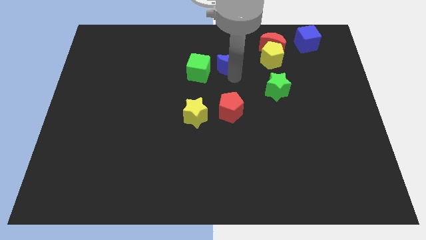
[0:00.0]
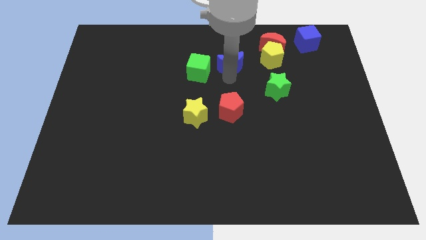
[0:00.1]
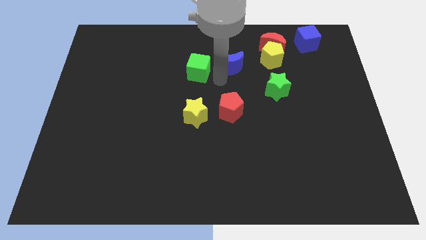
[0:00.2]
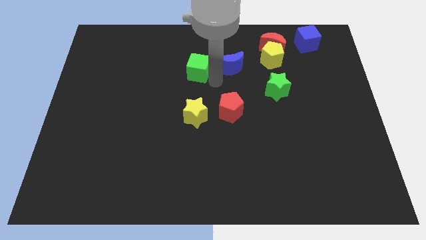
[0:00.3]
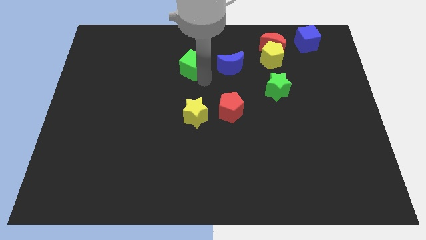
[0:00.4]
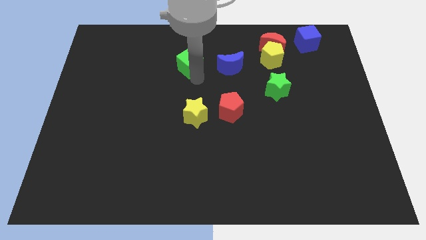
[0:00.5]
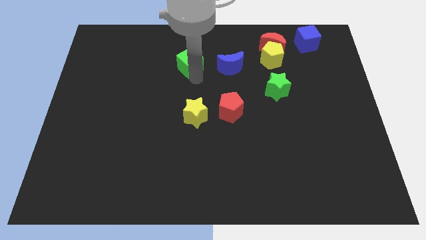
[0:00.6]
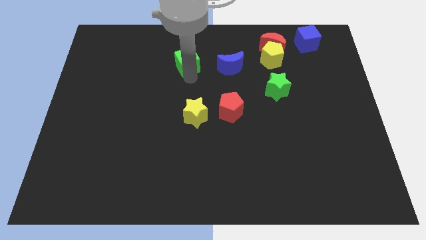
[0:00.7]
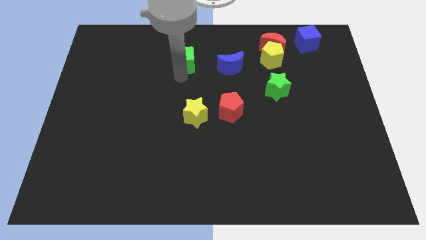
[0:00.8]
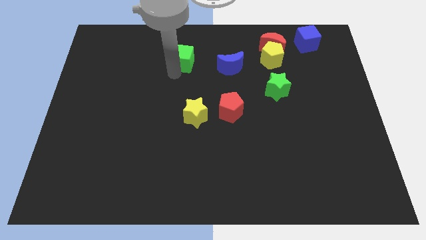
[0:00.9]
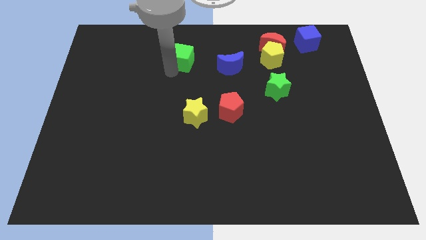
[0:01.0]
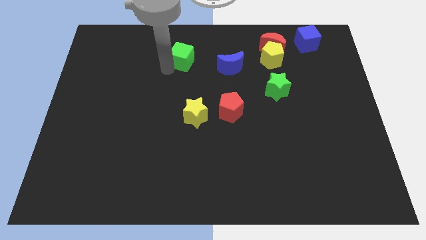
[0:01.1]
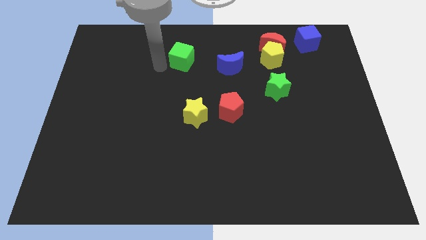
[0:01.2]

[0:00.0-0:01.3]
slightly push the green cube towards the top side of the board

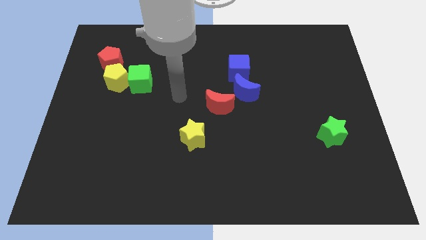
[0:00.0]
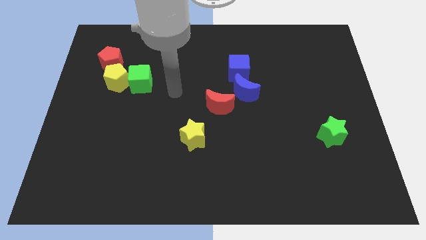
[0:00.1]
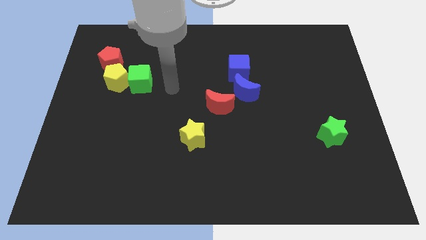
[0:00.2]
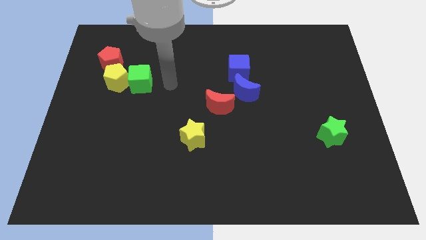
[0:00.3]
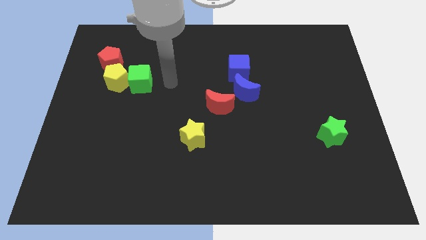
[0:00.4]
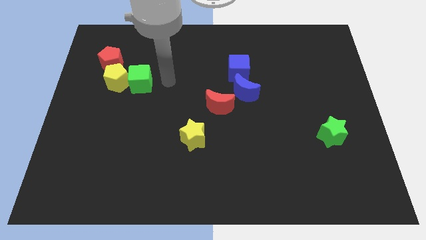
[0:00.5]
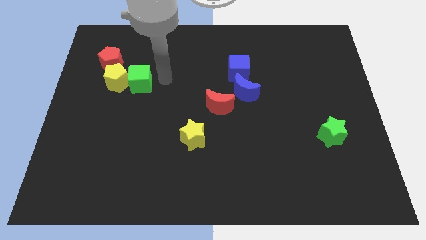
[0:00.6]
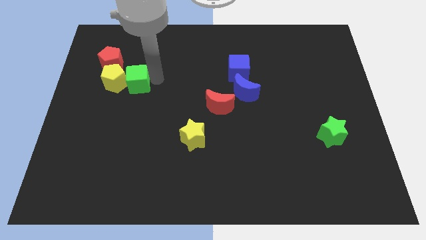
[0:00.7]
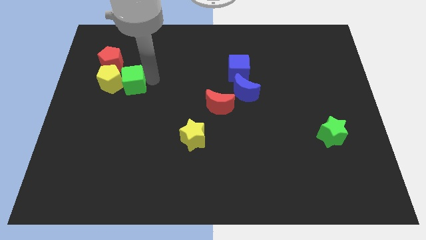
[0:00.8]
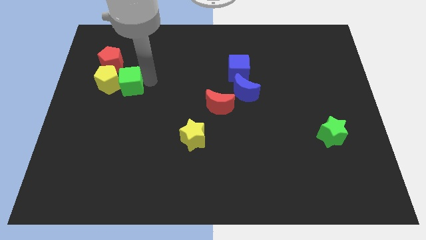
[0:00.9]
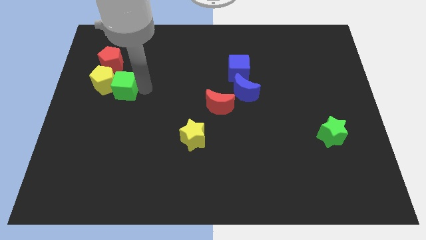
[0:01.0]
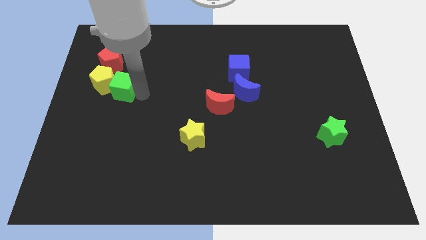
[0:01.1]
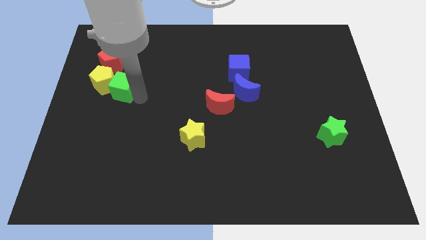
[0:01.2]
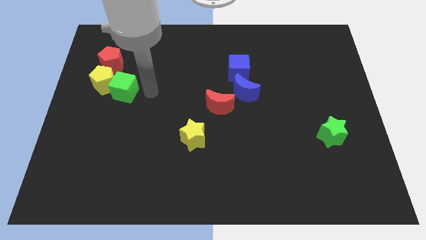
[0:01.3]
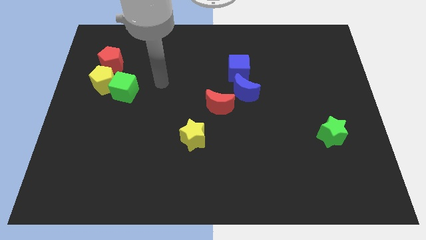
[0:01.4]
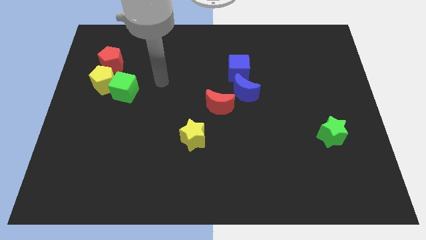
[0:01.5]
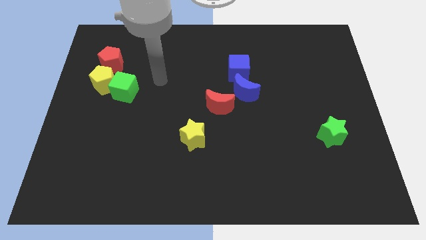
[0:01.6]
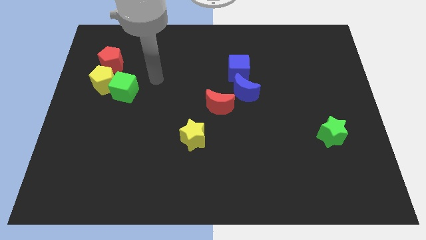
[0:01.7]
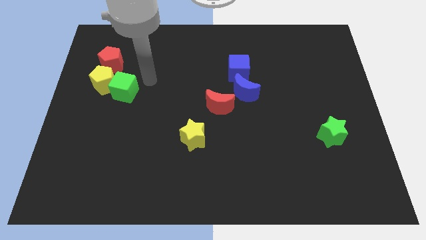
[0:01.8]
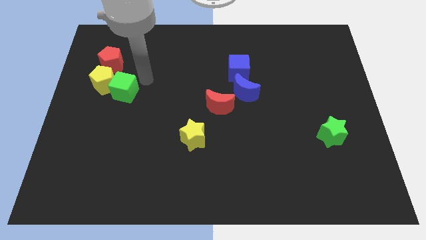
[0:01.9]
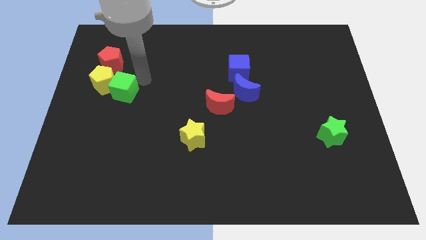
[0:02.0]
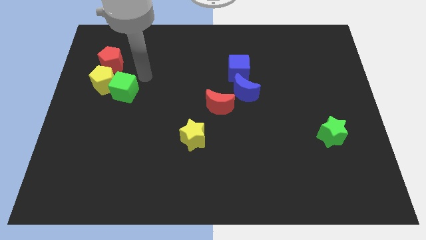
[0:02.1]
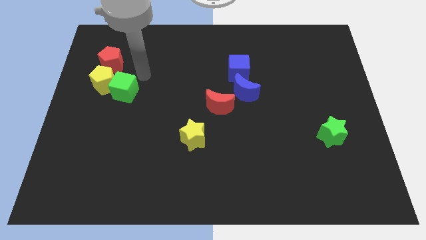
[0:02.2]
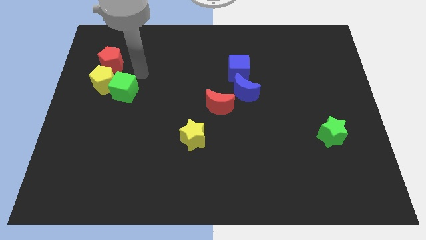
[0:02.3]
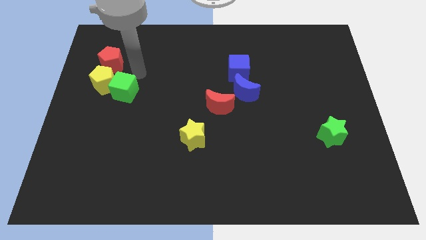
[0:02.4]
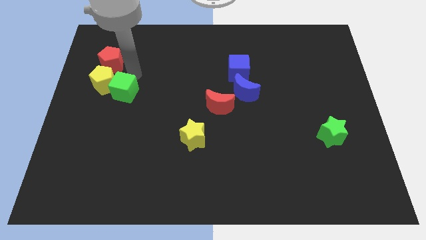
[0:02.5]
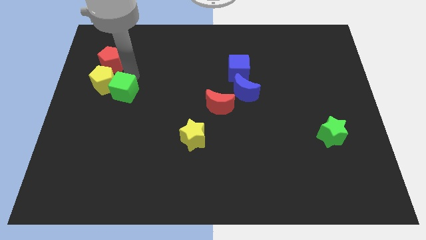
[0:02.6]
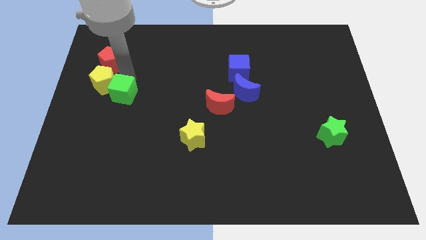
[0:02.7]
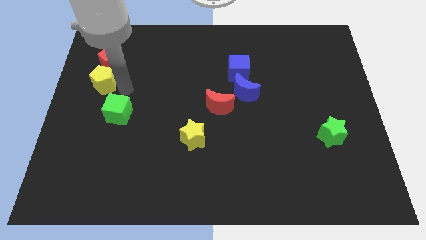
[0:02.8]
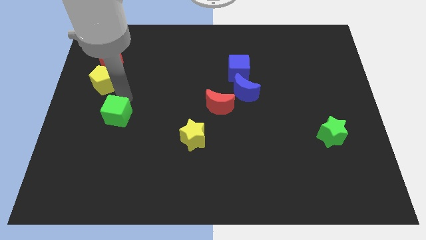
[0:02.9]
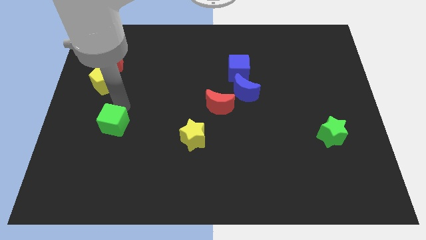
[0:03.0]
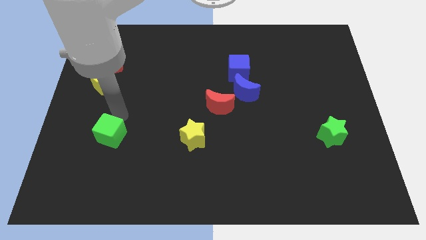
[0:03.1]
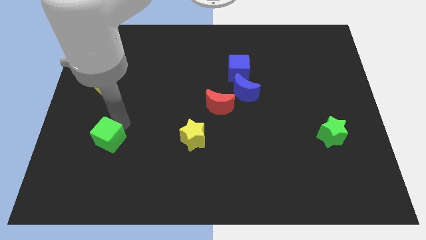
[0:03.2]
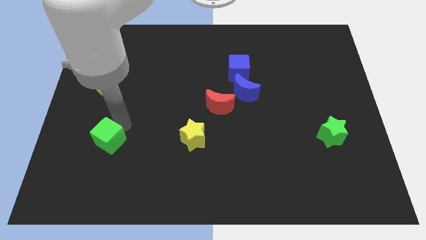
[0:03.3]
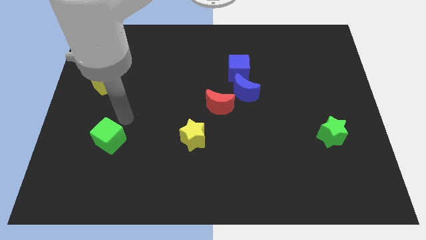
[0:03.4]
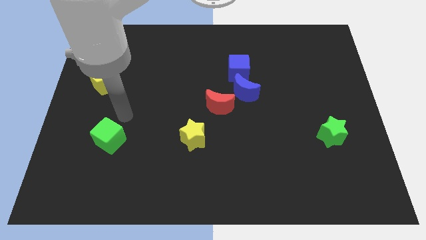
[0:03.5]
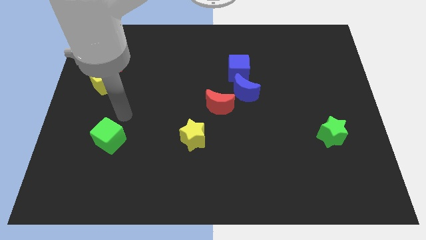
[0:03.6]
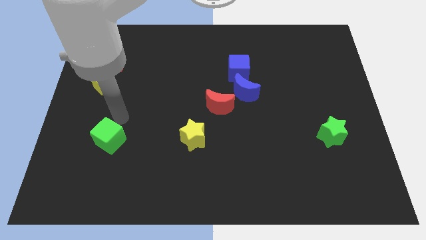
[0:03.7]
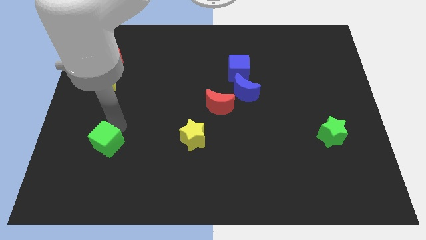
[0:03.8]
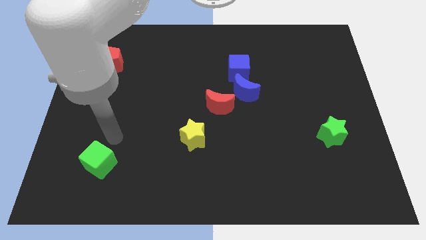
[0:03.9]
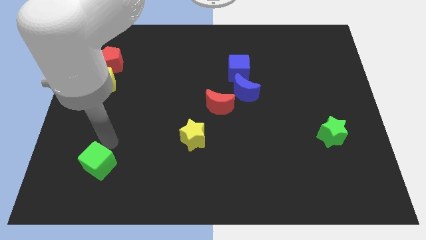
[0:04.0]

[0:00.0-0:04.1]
separate green cube and yellow pentagon

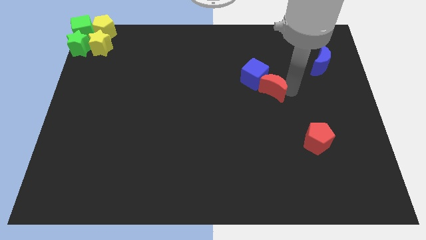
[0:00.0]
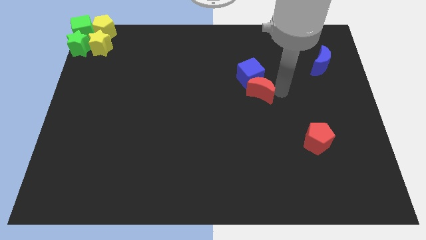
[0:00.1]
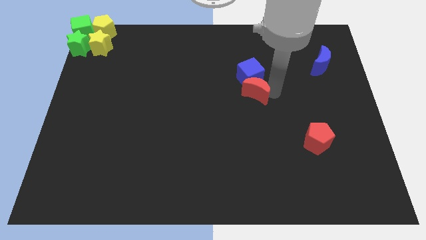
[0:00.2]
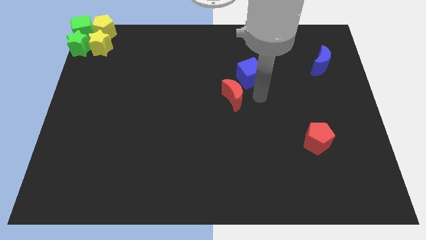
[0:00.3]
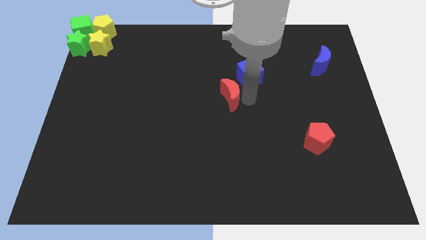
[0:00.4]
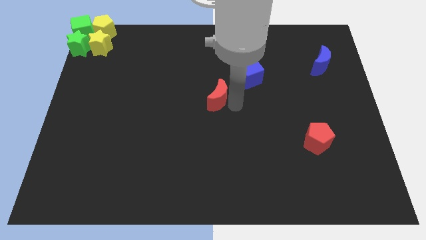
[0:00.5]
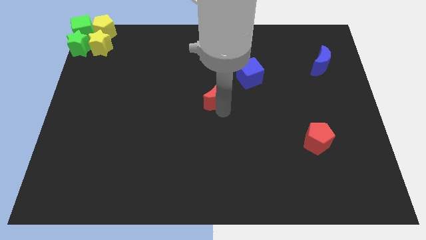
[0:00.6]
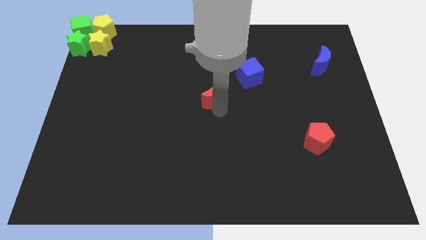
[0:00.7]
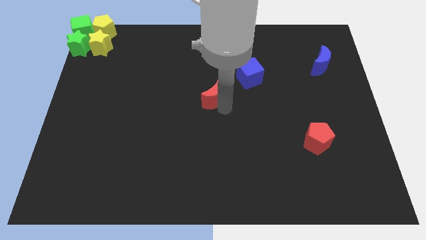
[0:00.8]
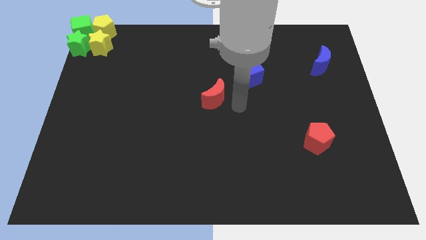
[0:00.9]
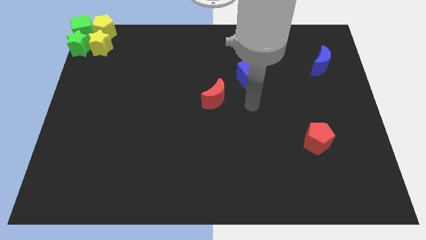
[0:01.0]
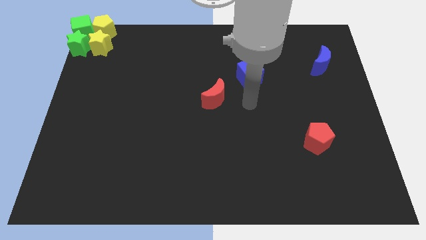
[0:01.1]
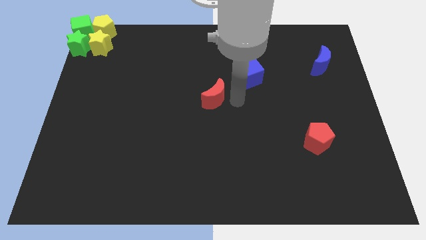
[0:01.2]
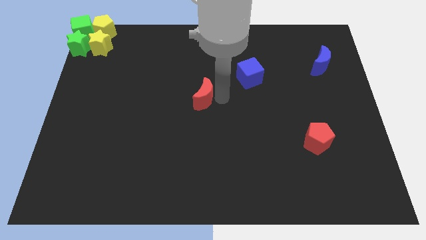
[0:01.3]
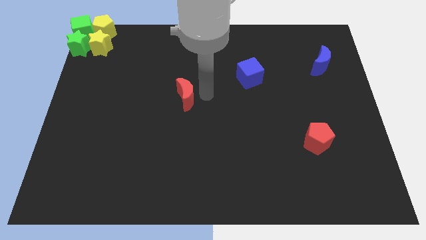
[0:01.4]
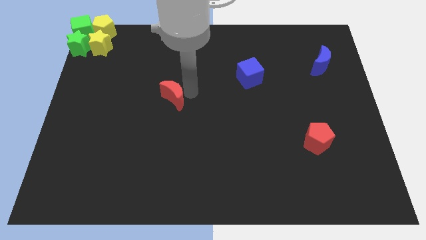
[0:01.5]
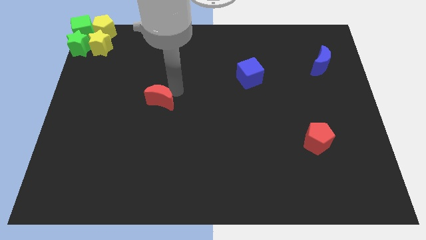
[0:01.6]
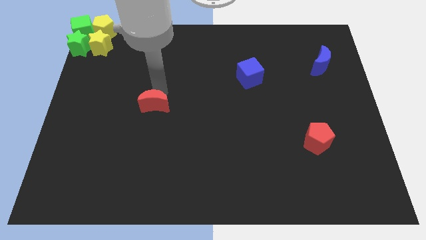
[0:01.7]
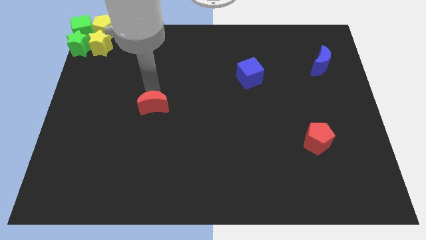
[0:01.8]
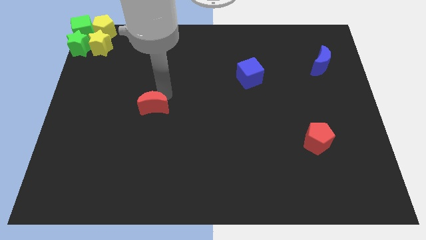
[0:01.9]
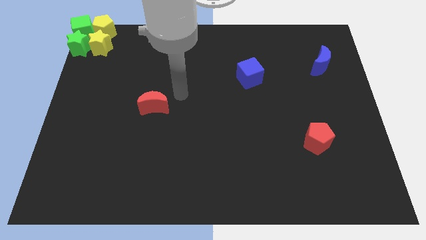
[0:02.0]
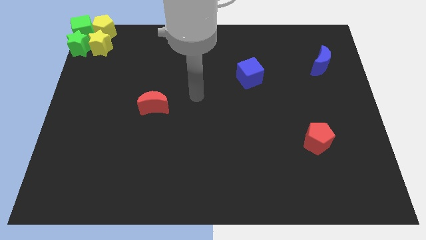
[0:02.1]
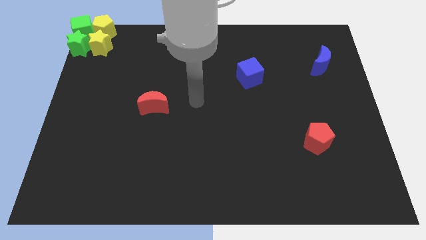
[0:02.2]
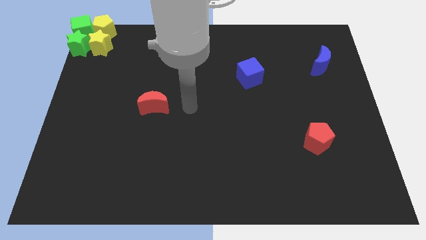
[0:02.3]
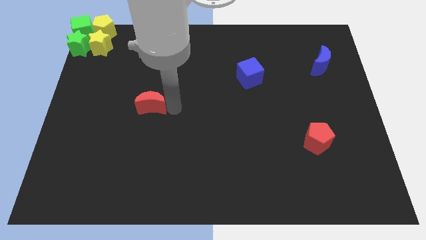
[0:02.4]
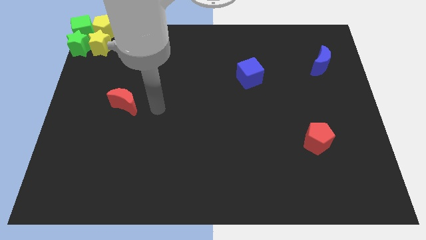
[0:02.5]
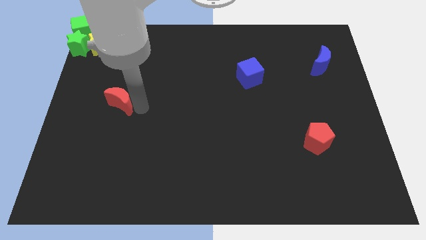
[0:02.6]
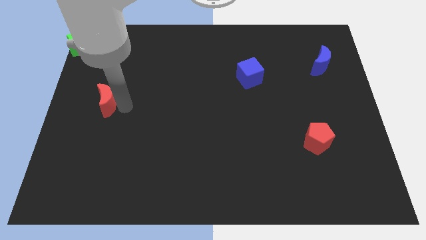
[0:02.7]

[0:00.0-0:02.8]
push the red crescent towards the left center

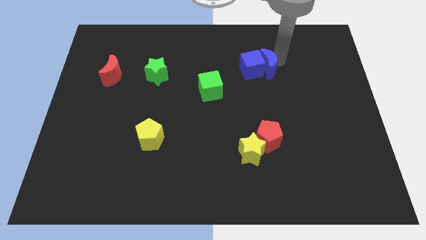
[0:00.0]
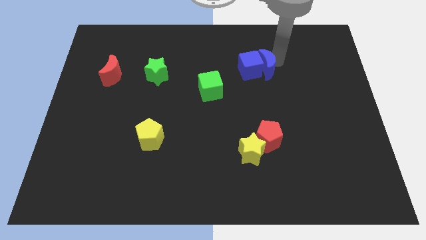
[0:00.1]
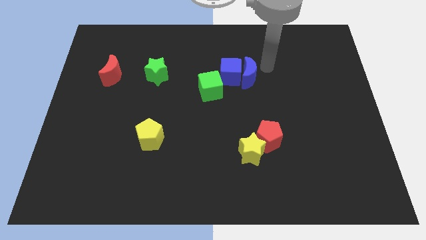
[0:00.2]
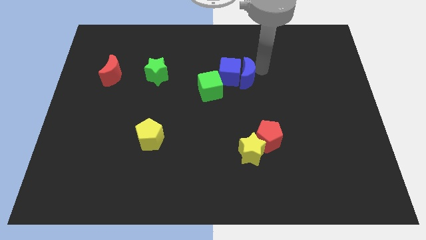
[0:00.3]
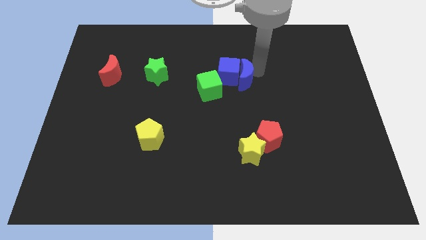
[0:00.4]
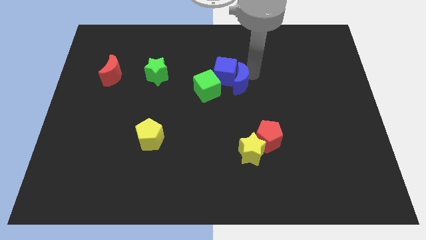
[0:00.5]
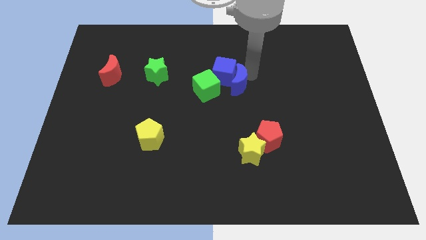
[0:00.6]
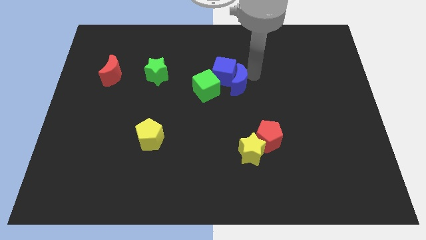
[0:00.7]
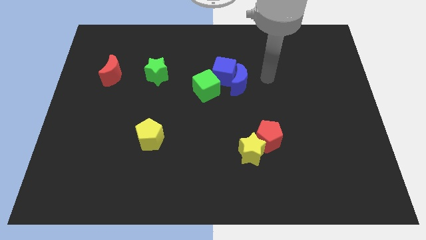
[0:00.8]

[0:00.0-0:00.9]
push blue cube and blue moon into green cube
